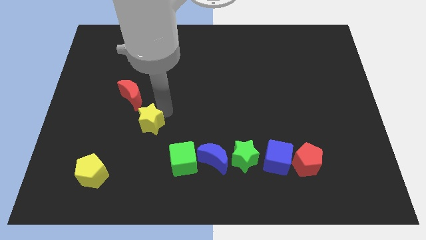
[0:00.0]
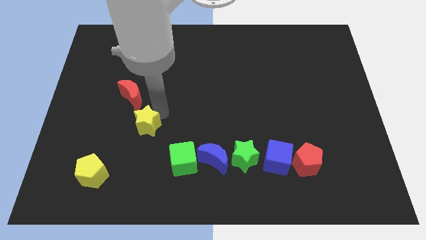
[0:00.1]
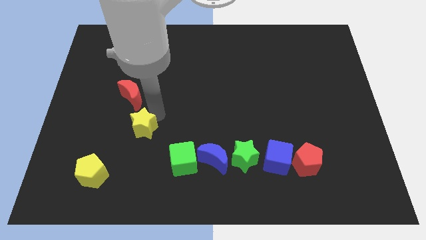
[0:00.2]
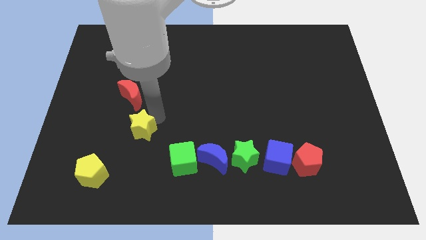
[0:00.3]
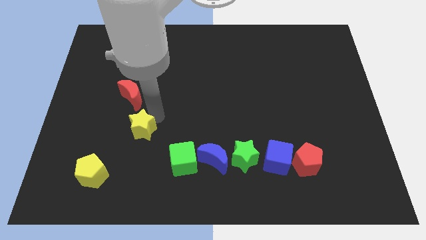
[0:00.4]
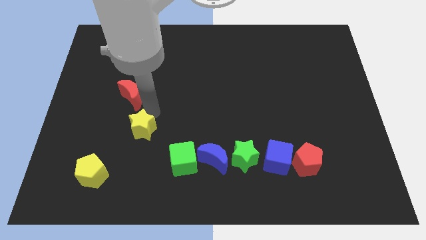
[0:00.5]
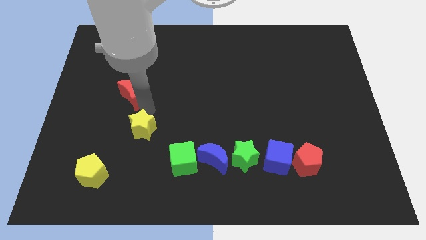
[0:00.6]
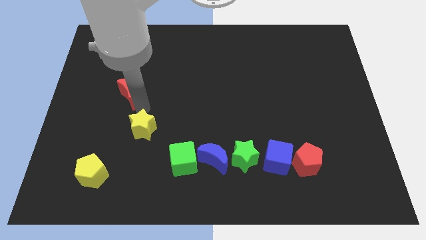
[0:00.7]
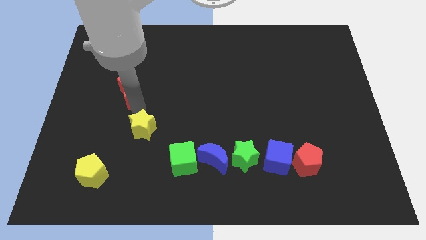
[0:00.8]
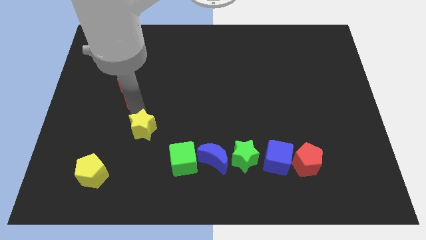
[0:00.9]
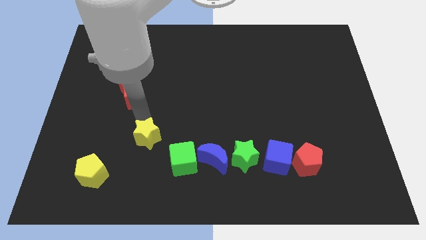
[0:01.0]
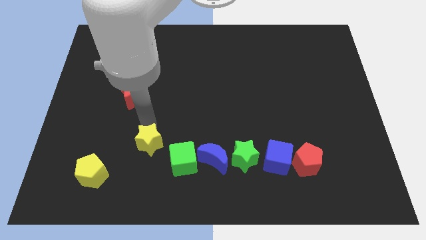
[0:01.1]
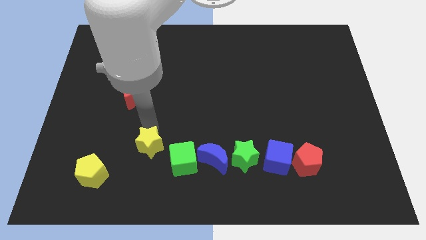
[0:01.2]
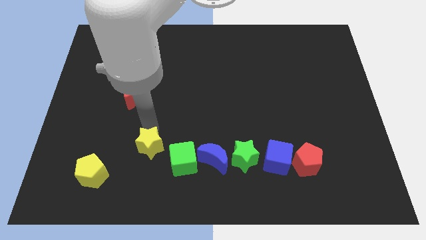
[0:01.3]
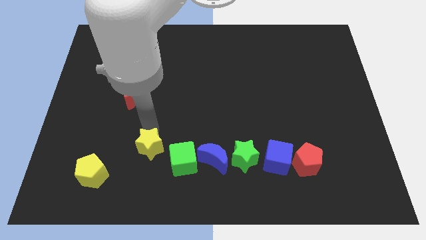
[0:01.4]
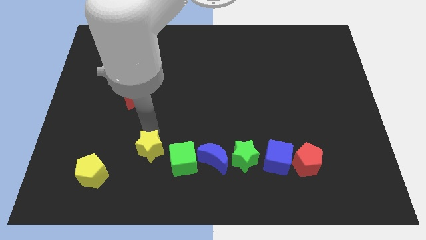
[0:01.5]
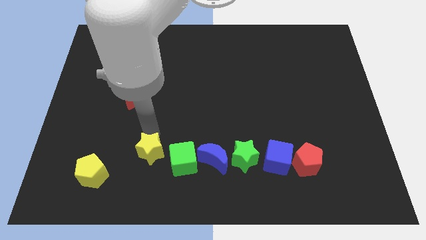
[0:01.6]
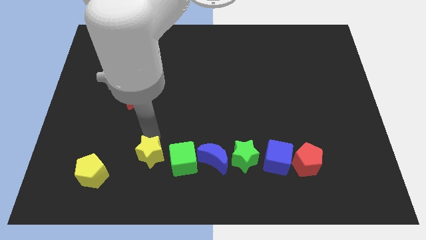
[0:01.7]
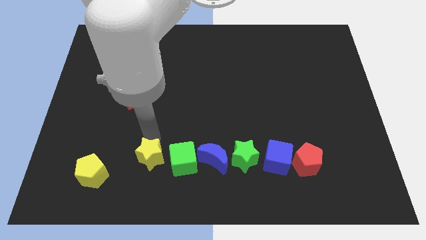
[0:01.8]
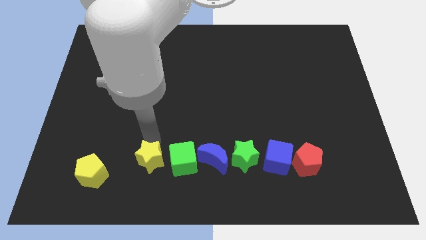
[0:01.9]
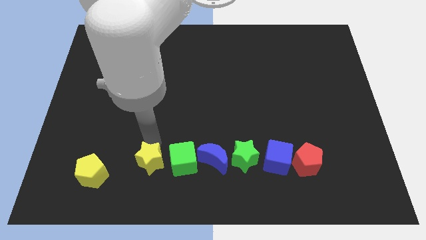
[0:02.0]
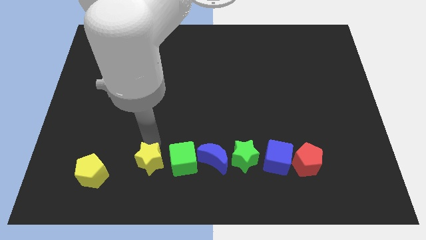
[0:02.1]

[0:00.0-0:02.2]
push the yellow star to the left of the green cube

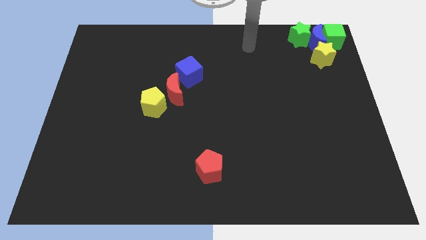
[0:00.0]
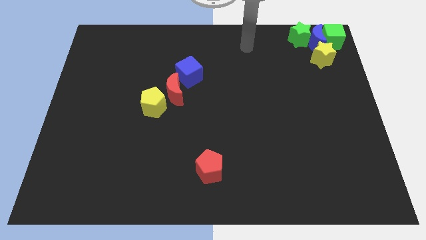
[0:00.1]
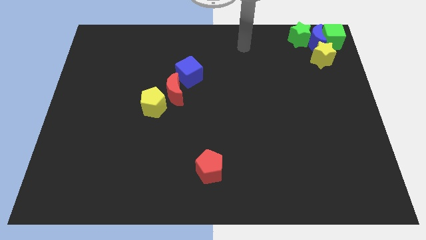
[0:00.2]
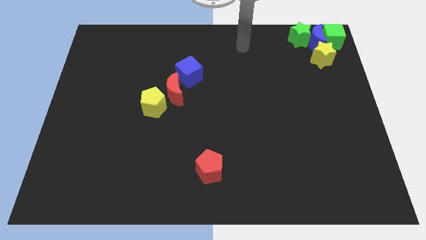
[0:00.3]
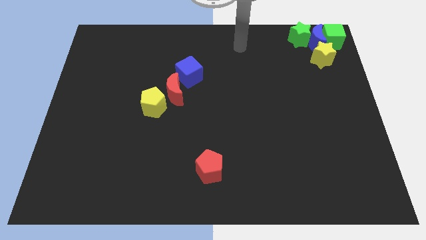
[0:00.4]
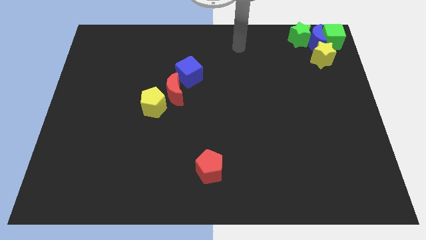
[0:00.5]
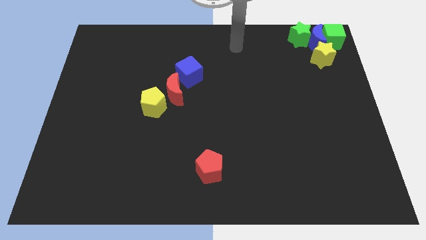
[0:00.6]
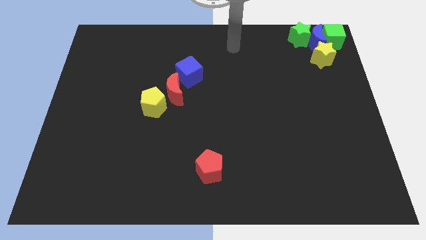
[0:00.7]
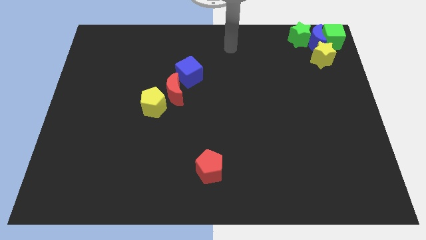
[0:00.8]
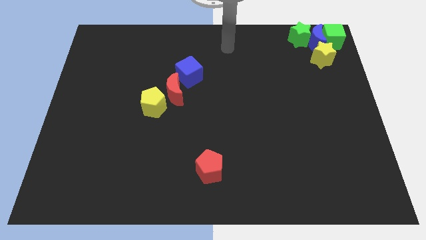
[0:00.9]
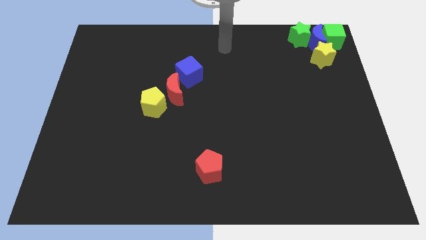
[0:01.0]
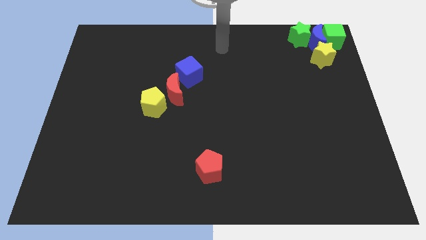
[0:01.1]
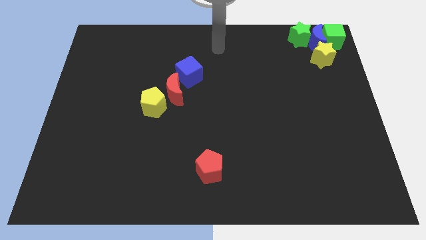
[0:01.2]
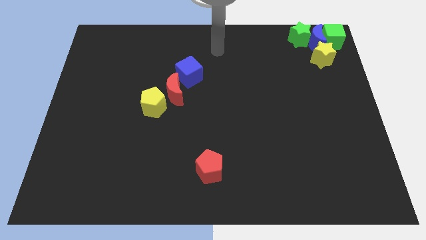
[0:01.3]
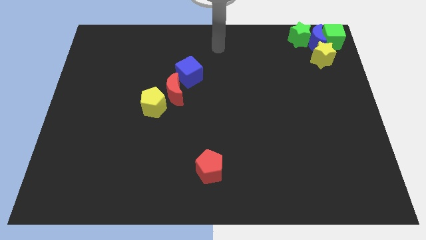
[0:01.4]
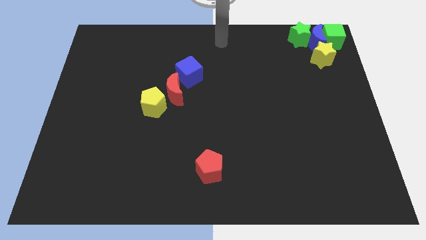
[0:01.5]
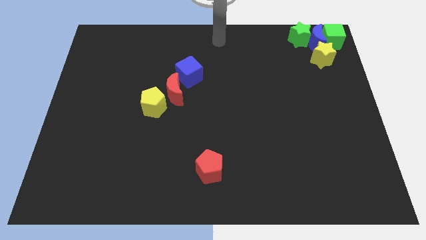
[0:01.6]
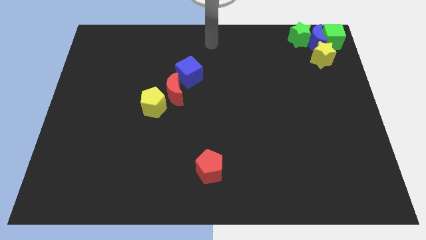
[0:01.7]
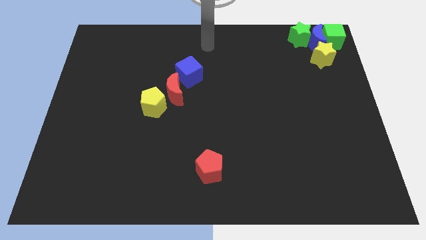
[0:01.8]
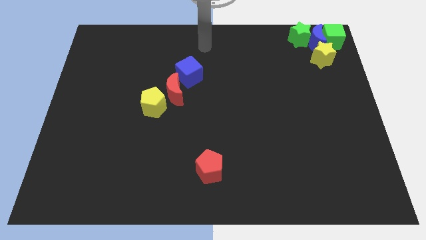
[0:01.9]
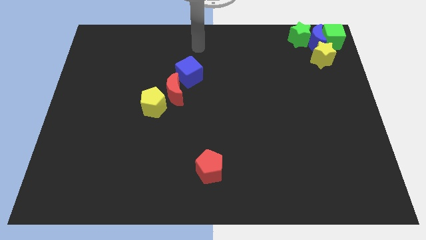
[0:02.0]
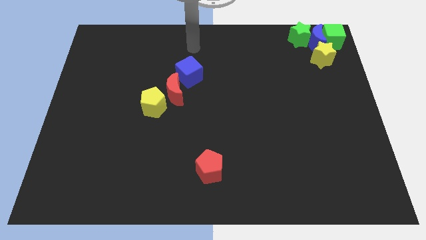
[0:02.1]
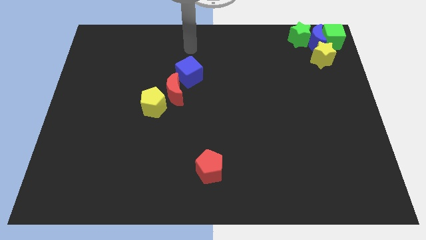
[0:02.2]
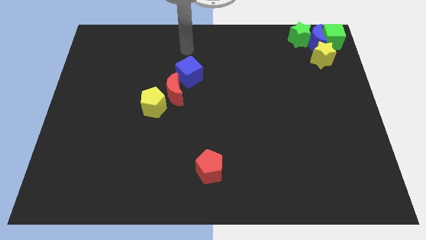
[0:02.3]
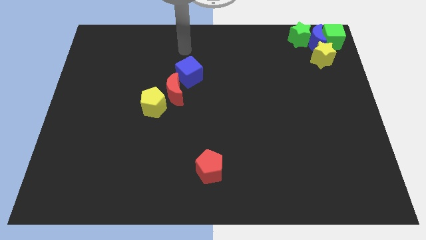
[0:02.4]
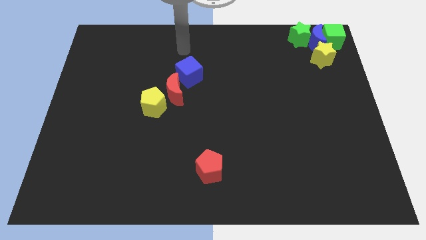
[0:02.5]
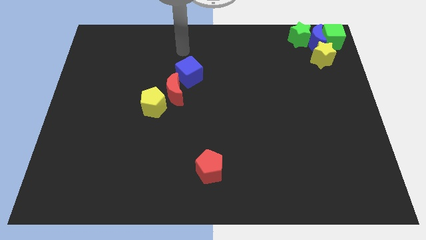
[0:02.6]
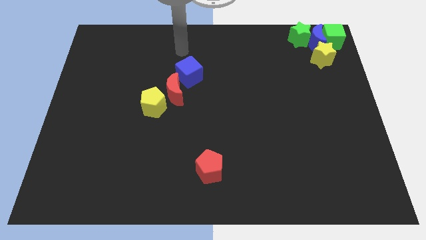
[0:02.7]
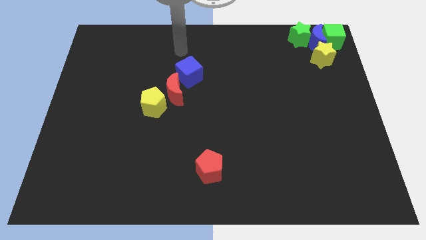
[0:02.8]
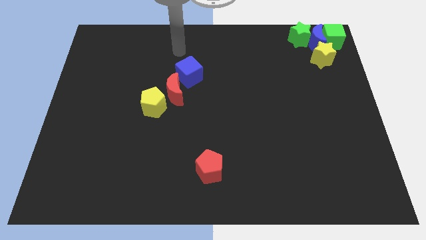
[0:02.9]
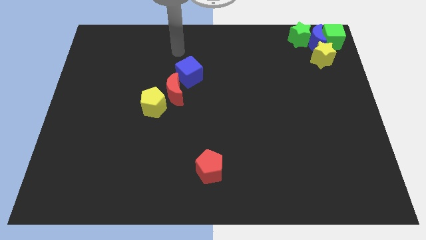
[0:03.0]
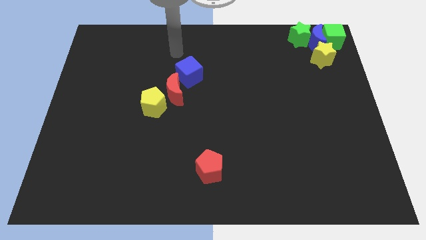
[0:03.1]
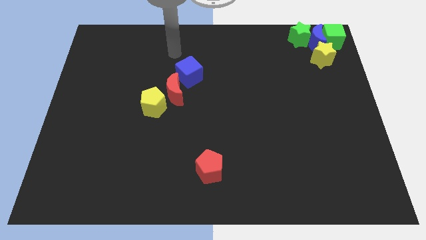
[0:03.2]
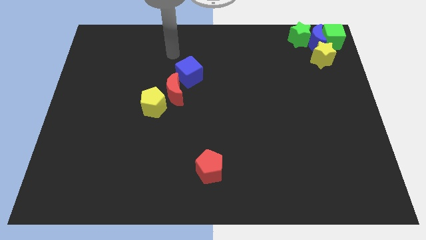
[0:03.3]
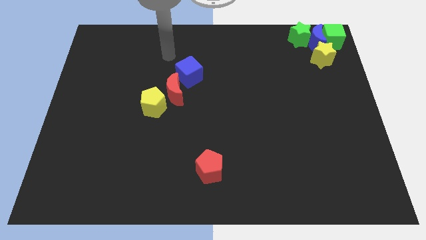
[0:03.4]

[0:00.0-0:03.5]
move your arm and point on top of blue cube diagonally

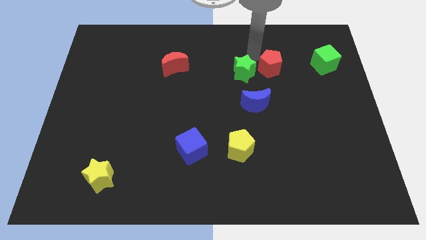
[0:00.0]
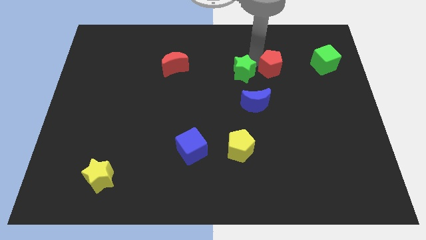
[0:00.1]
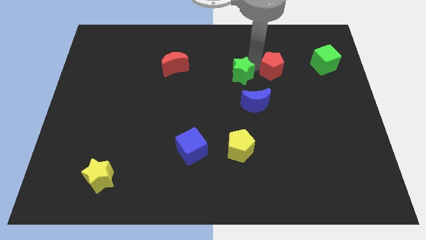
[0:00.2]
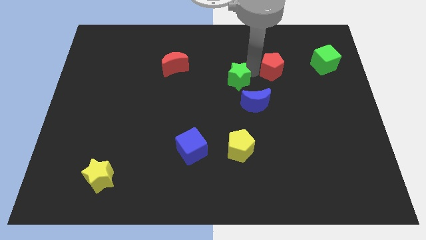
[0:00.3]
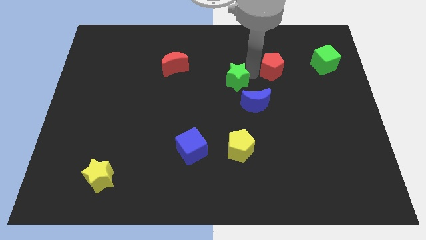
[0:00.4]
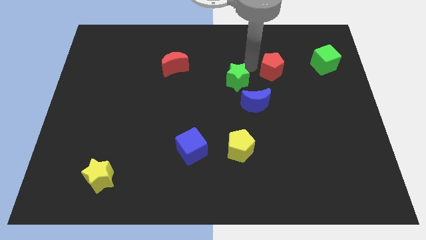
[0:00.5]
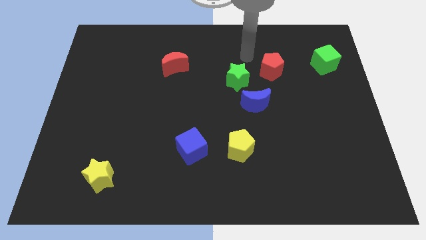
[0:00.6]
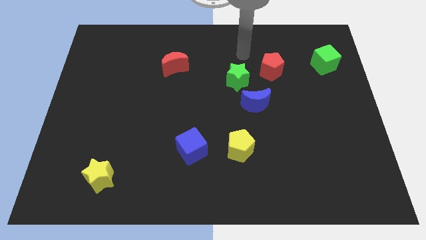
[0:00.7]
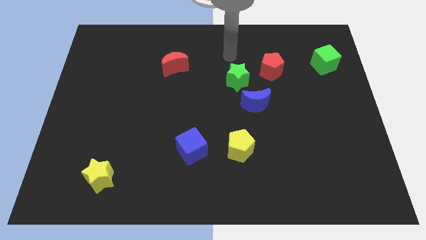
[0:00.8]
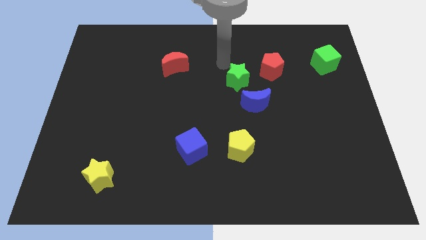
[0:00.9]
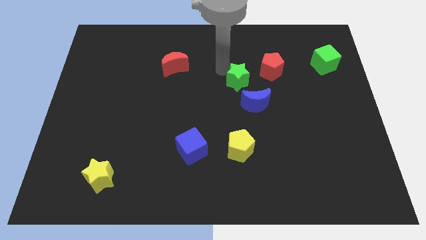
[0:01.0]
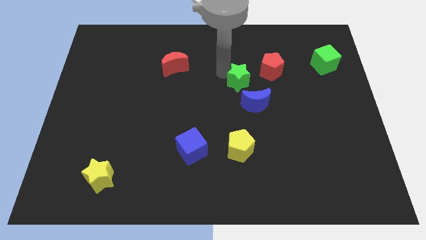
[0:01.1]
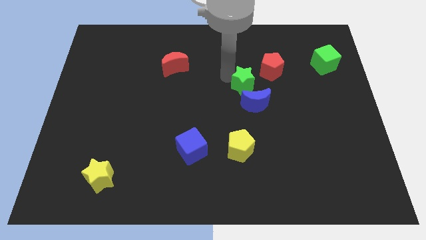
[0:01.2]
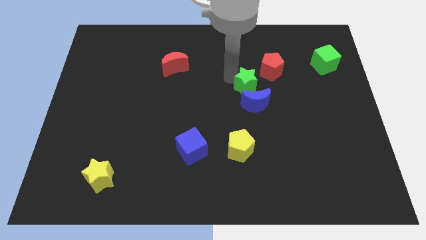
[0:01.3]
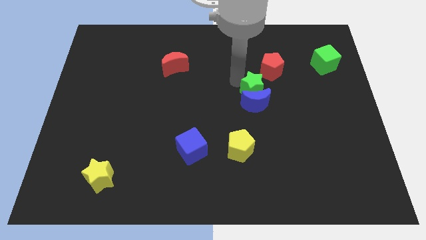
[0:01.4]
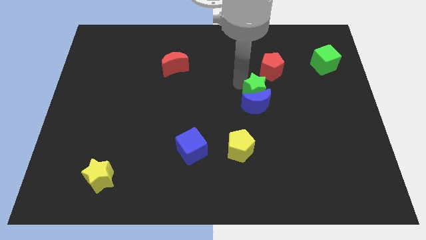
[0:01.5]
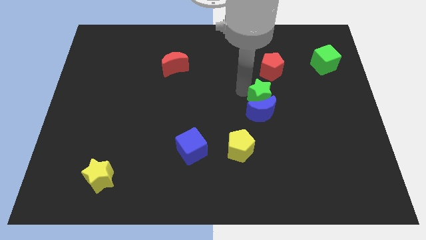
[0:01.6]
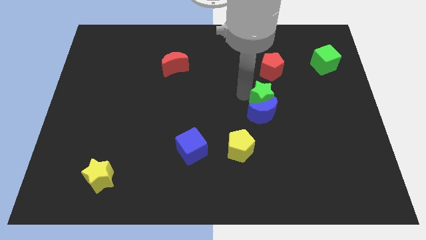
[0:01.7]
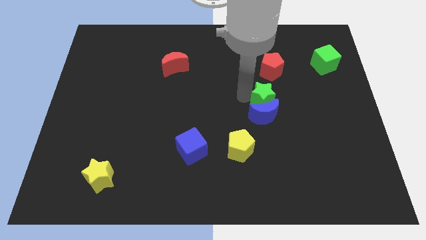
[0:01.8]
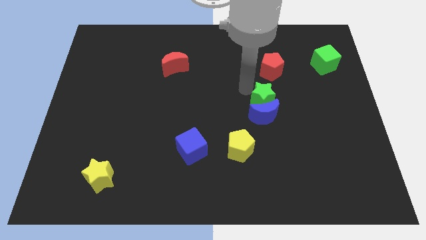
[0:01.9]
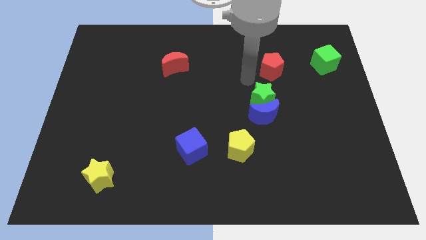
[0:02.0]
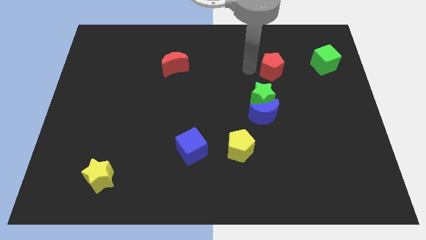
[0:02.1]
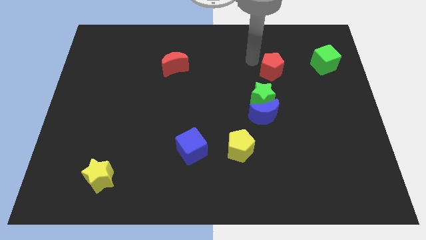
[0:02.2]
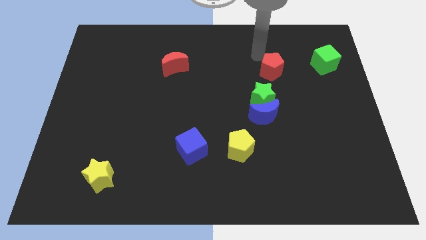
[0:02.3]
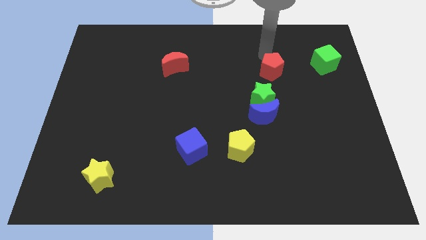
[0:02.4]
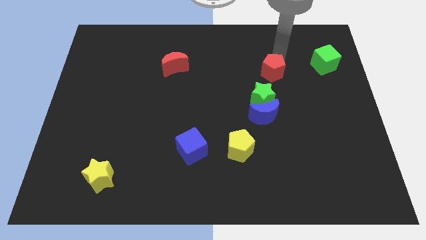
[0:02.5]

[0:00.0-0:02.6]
push the red pentagon green star and blue moon towards the bottom side of the board

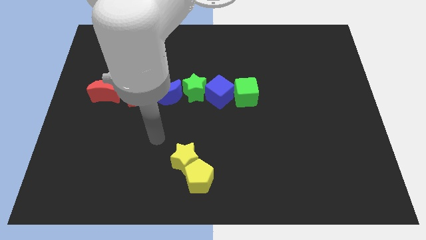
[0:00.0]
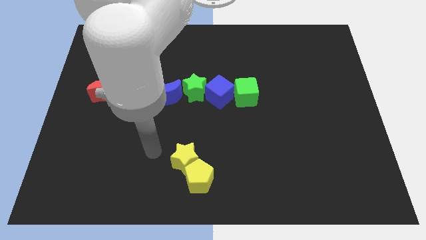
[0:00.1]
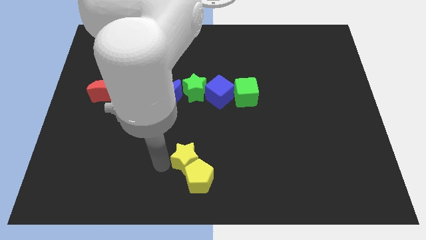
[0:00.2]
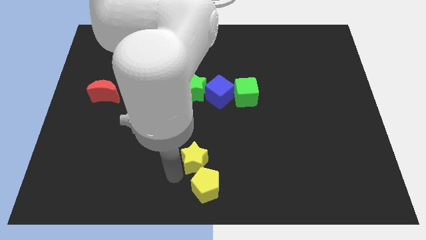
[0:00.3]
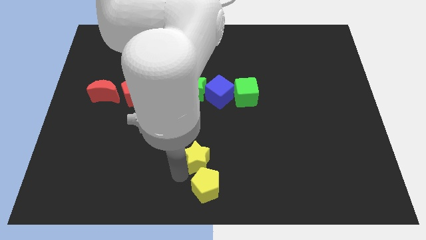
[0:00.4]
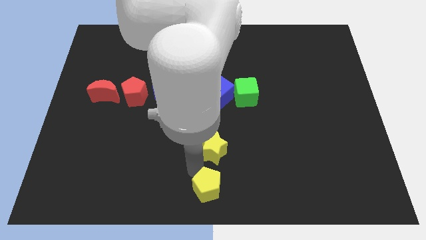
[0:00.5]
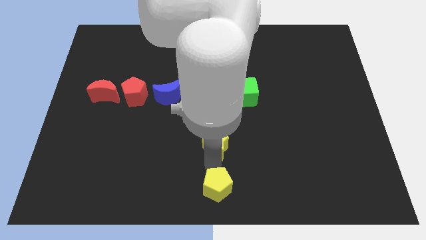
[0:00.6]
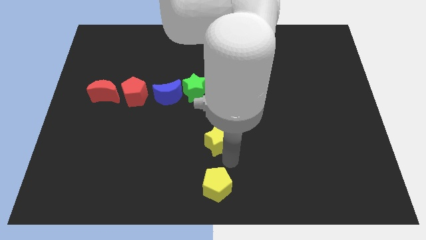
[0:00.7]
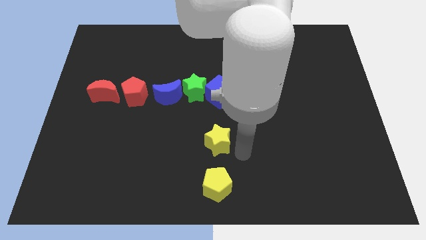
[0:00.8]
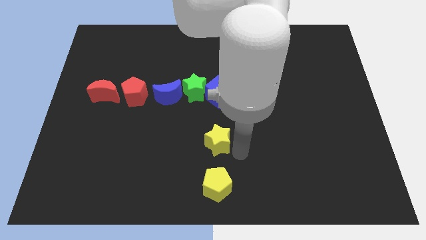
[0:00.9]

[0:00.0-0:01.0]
place yellow star down to the blue cube
